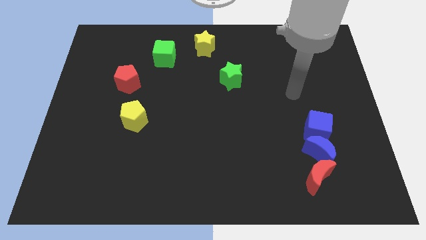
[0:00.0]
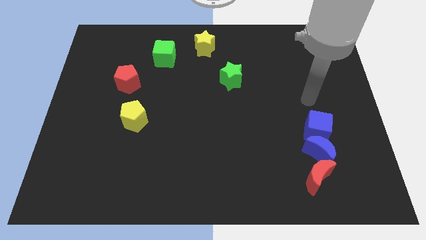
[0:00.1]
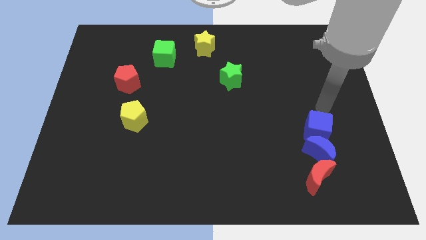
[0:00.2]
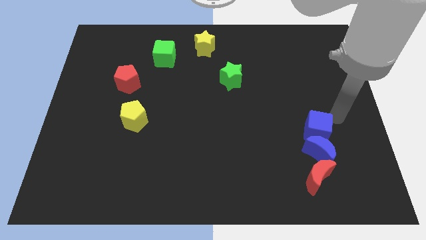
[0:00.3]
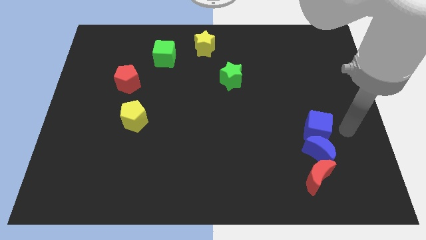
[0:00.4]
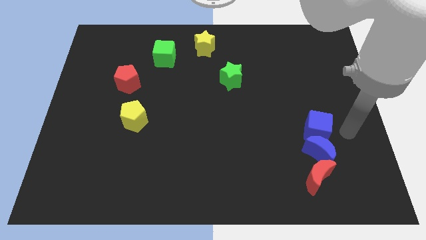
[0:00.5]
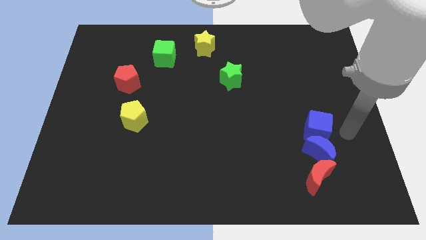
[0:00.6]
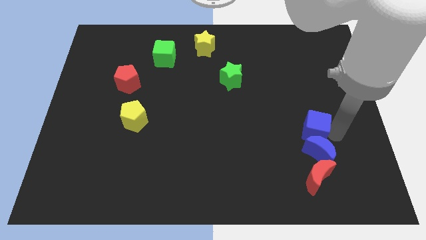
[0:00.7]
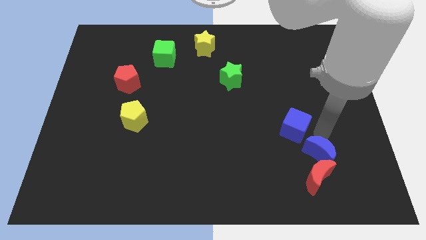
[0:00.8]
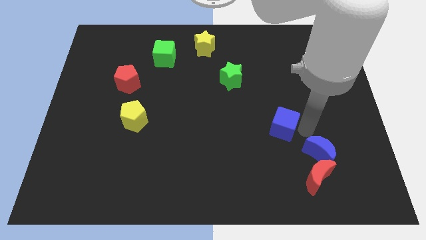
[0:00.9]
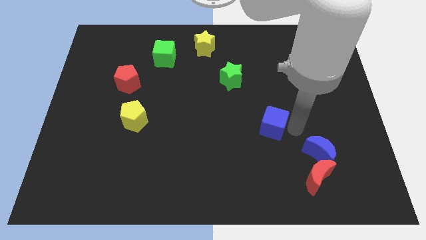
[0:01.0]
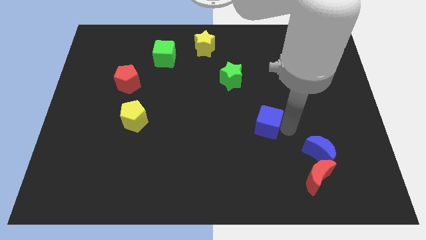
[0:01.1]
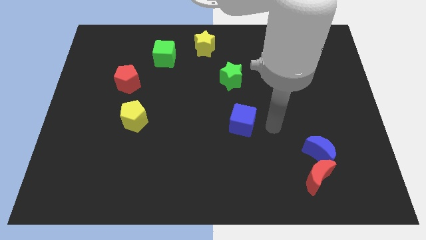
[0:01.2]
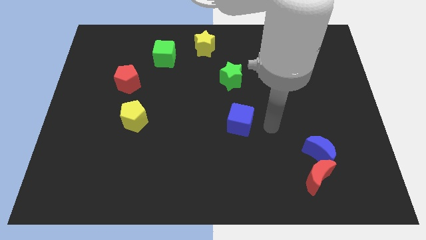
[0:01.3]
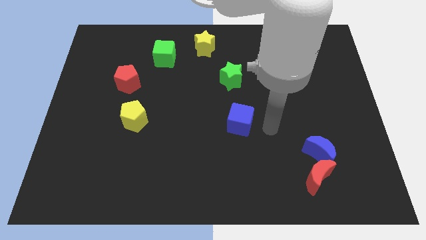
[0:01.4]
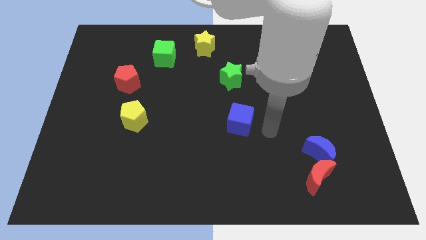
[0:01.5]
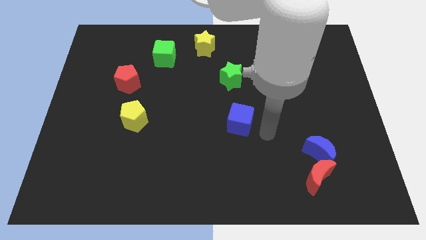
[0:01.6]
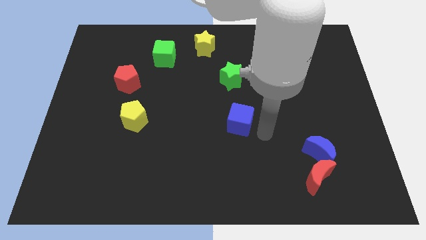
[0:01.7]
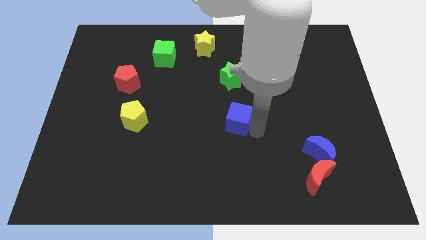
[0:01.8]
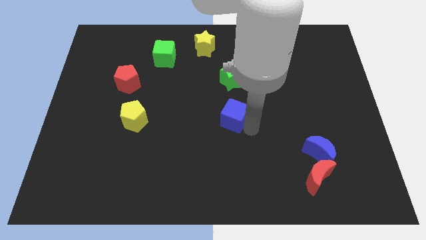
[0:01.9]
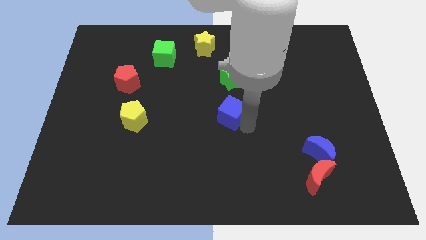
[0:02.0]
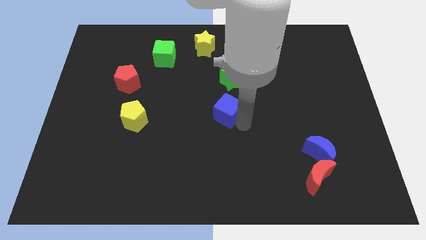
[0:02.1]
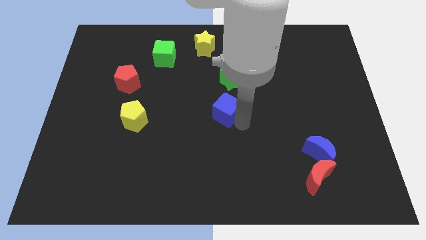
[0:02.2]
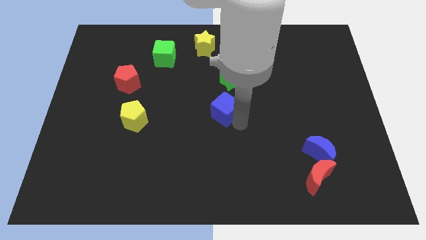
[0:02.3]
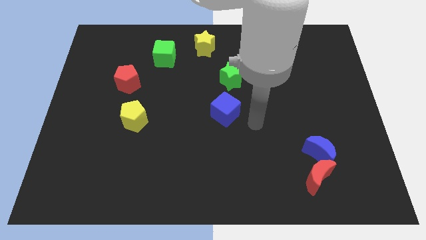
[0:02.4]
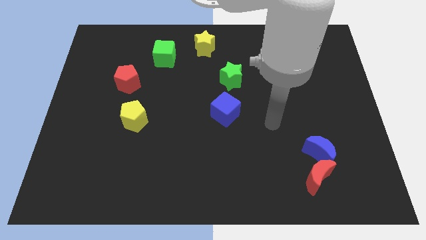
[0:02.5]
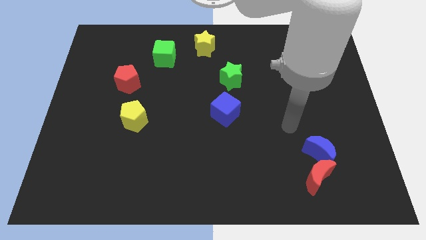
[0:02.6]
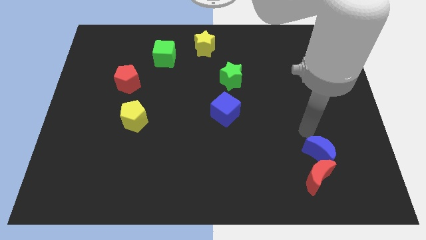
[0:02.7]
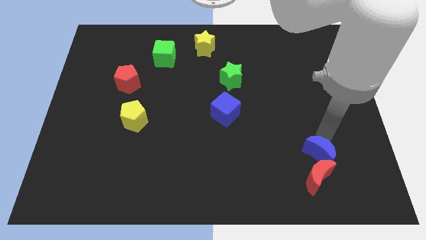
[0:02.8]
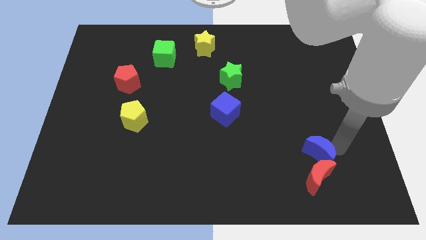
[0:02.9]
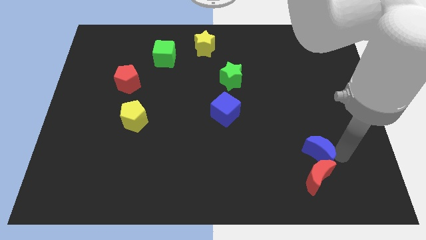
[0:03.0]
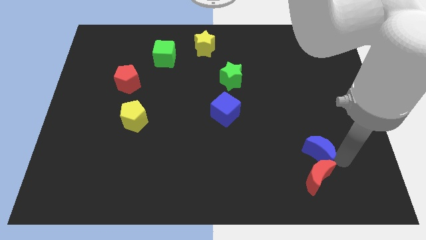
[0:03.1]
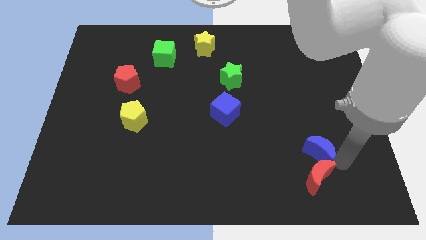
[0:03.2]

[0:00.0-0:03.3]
place the blue cube vertically below the green star

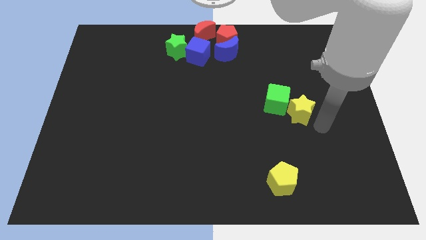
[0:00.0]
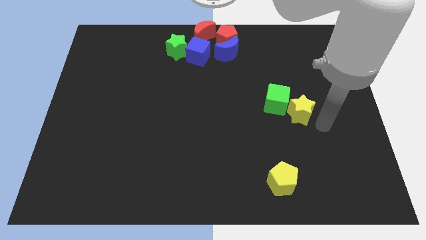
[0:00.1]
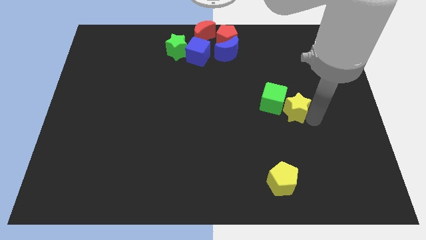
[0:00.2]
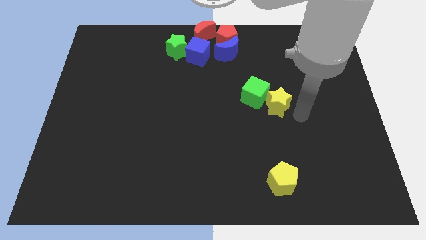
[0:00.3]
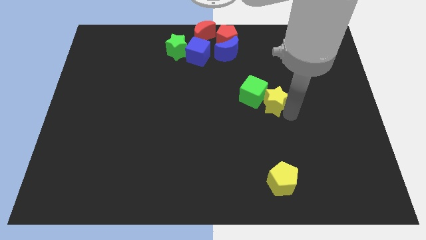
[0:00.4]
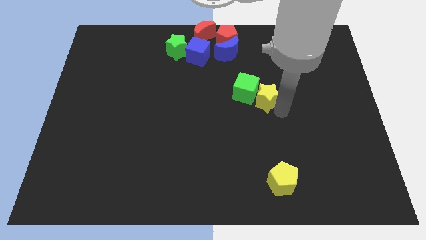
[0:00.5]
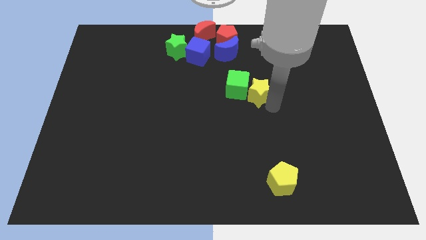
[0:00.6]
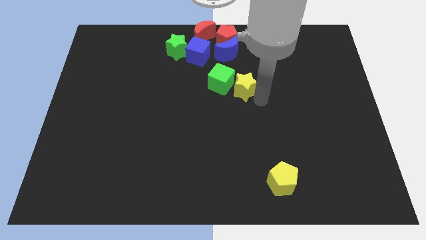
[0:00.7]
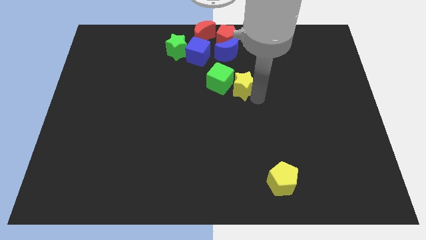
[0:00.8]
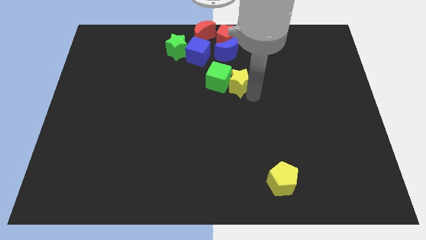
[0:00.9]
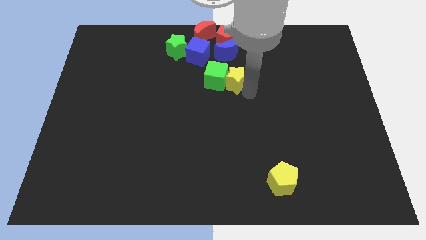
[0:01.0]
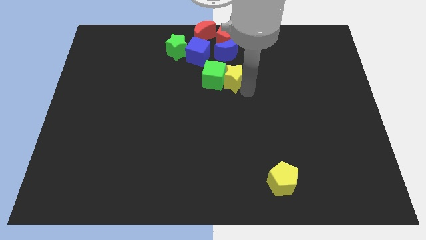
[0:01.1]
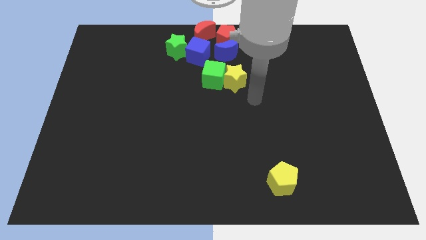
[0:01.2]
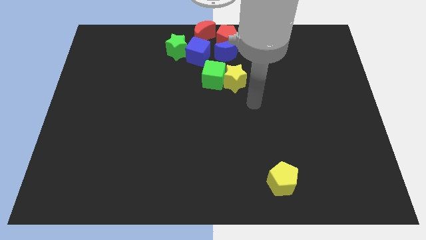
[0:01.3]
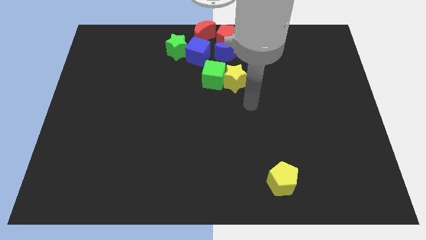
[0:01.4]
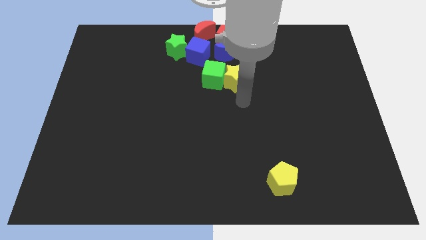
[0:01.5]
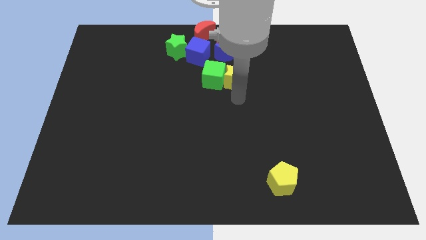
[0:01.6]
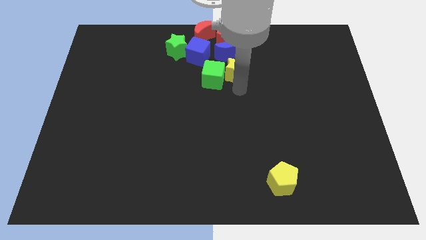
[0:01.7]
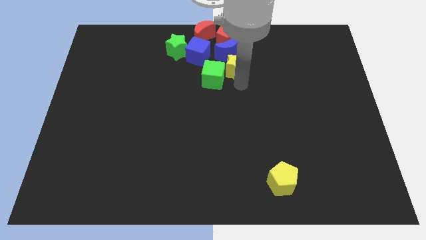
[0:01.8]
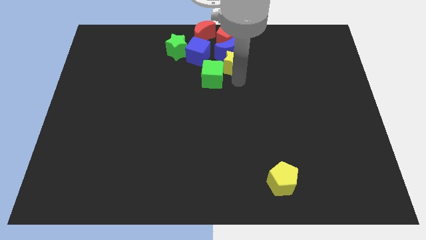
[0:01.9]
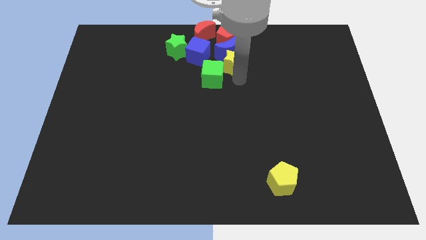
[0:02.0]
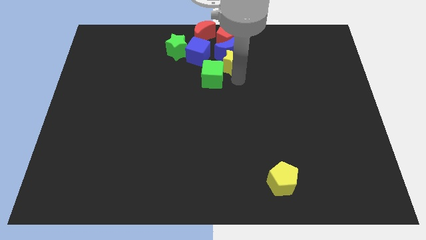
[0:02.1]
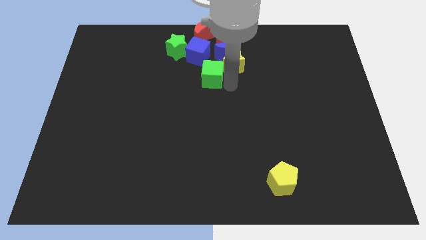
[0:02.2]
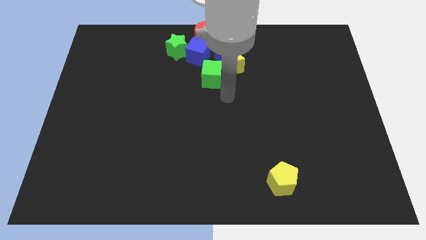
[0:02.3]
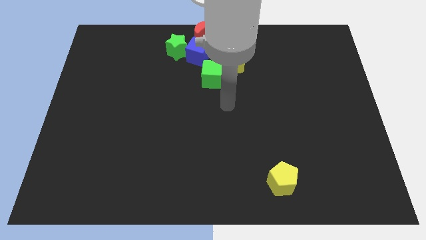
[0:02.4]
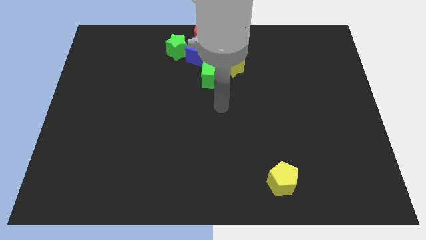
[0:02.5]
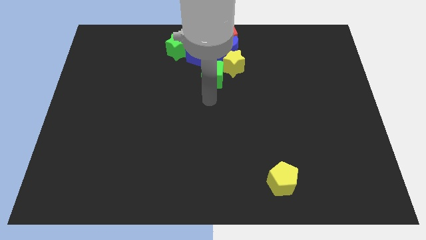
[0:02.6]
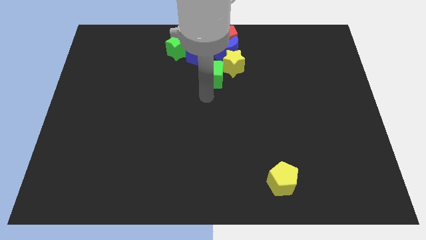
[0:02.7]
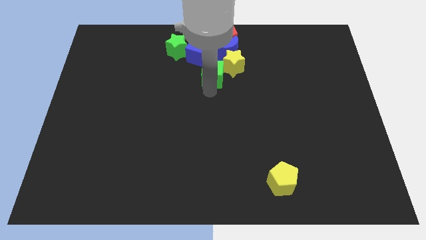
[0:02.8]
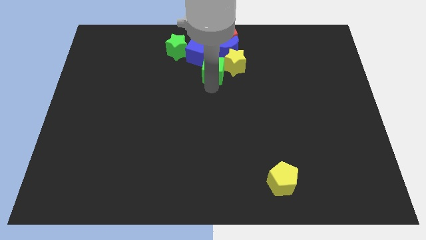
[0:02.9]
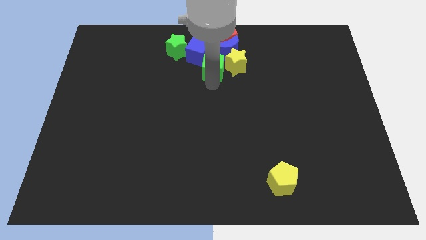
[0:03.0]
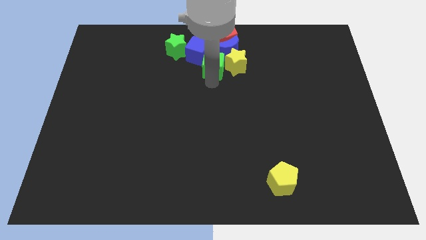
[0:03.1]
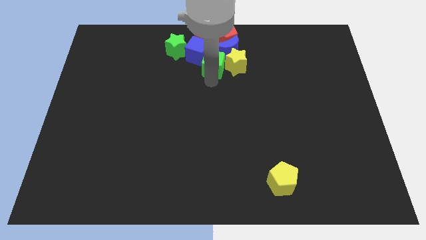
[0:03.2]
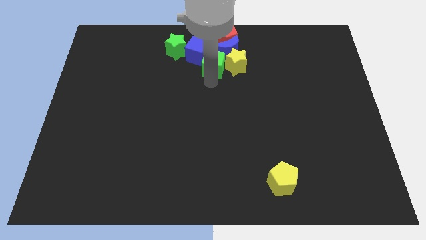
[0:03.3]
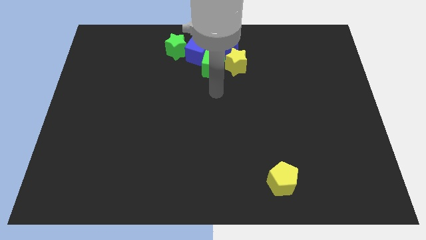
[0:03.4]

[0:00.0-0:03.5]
push the yellow star and the green cube into the blue blocks

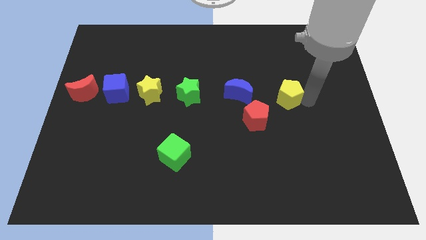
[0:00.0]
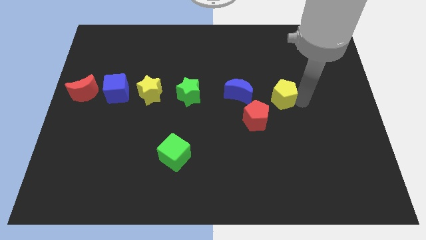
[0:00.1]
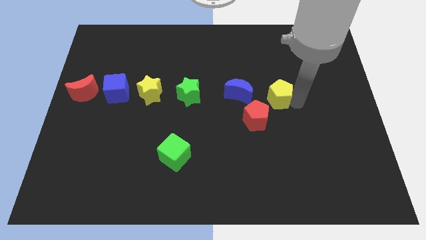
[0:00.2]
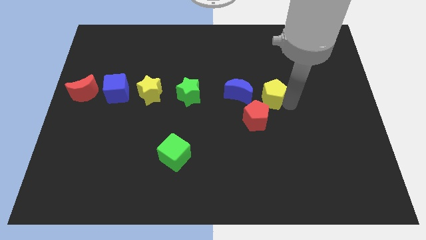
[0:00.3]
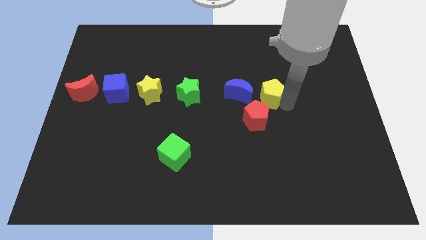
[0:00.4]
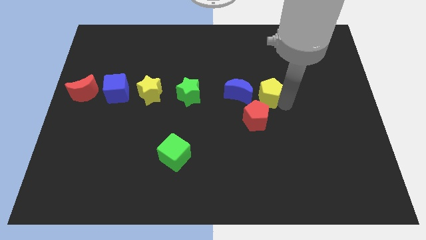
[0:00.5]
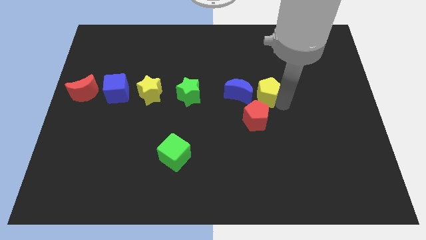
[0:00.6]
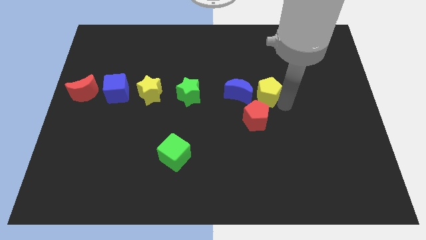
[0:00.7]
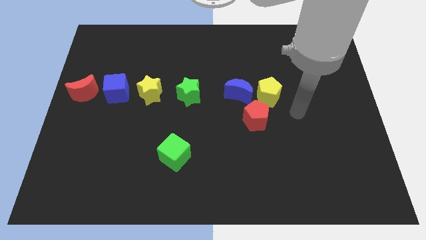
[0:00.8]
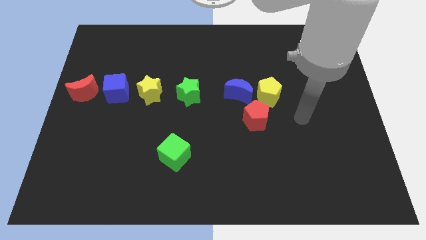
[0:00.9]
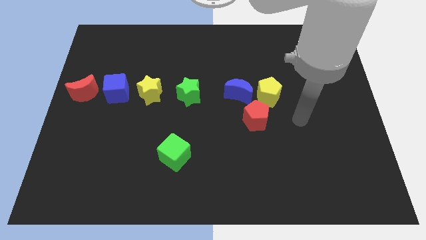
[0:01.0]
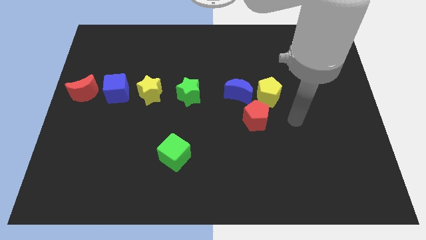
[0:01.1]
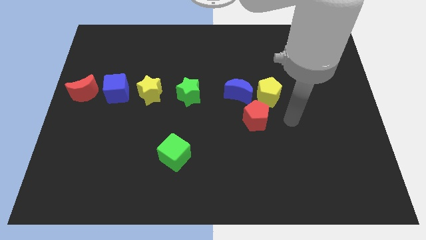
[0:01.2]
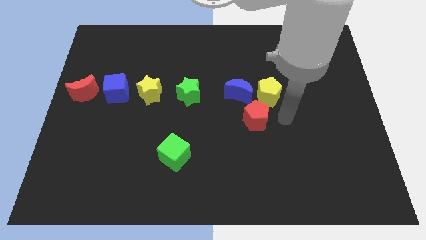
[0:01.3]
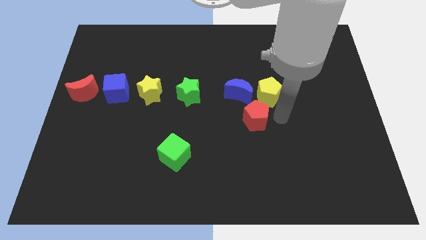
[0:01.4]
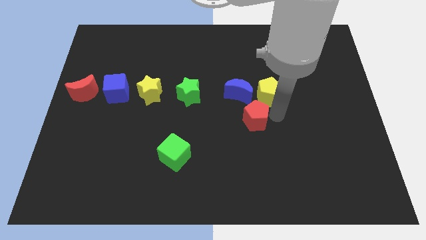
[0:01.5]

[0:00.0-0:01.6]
move the yellow pentagon towards the blue crescent

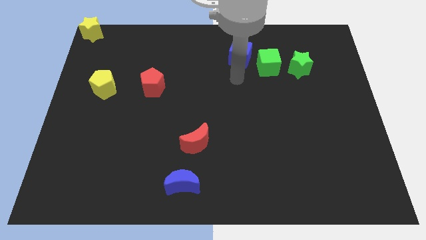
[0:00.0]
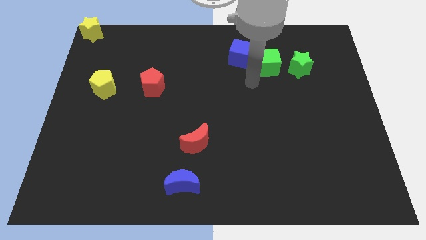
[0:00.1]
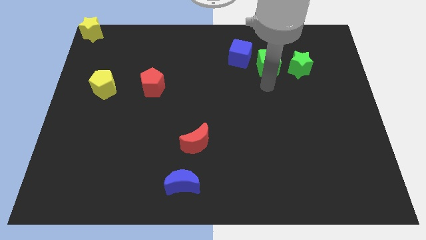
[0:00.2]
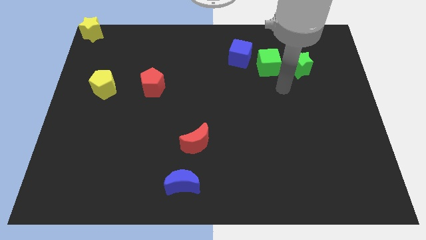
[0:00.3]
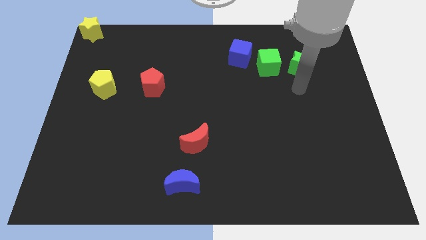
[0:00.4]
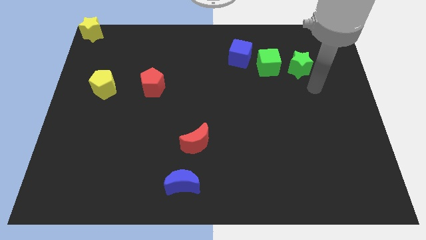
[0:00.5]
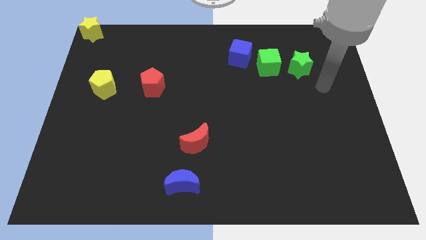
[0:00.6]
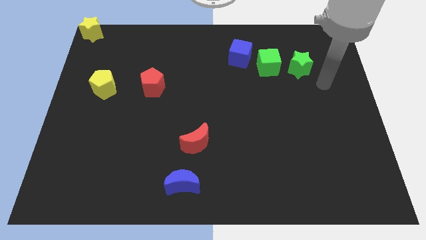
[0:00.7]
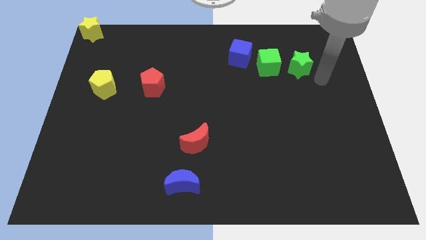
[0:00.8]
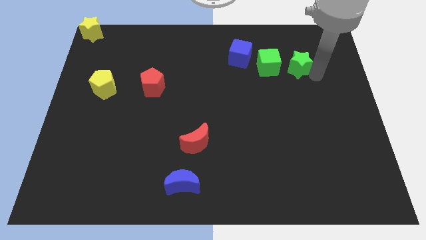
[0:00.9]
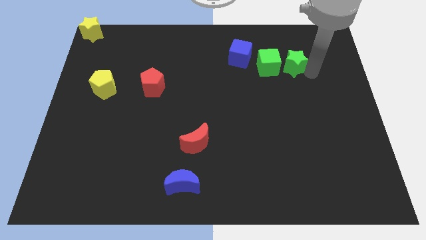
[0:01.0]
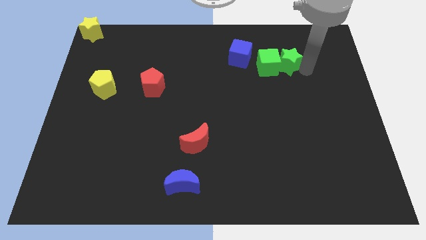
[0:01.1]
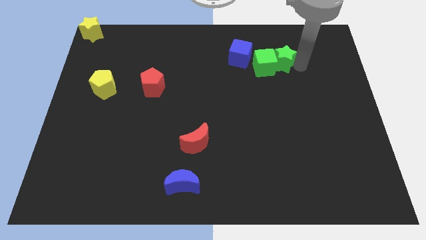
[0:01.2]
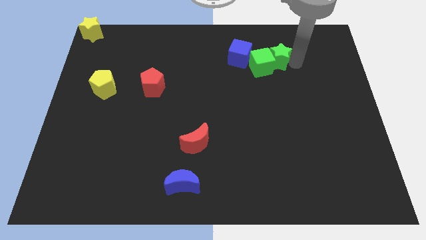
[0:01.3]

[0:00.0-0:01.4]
move the green star into the green cube
